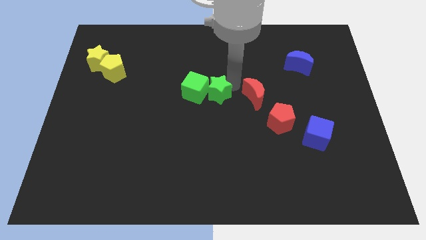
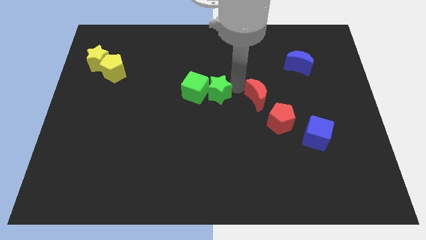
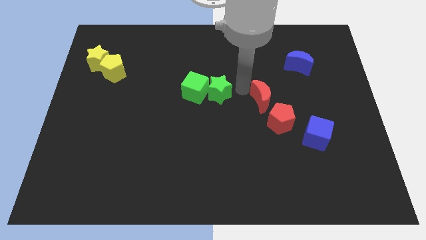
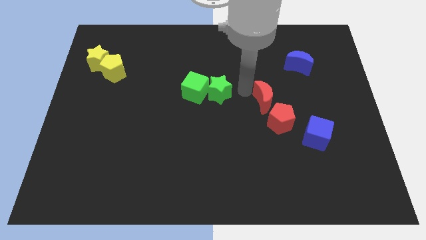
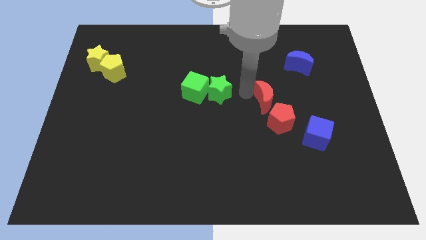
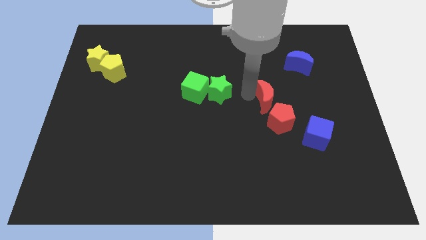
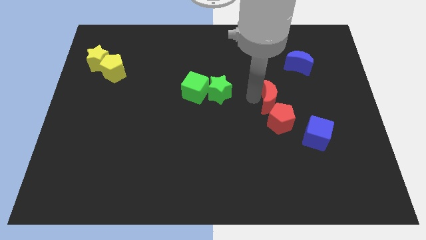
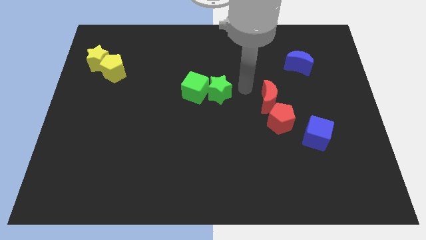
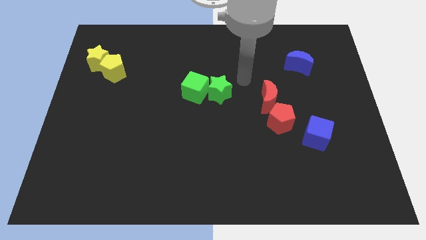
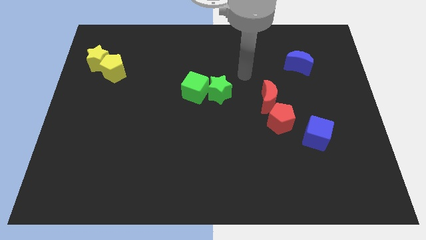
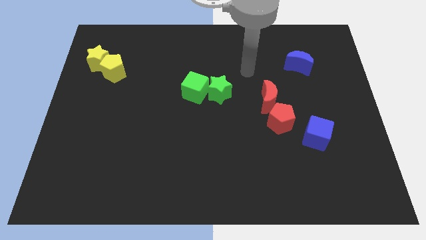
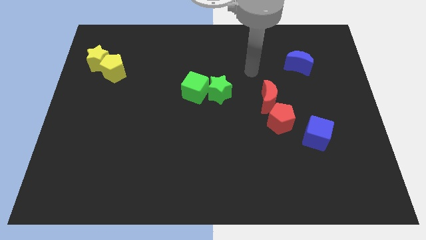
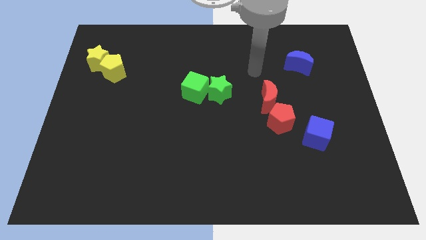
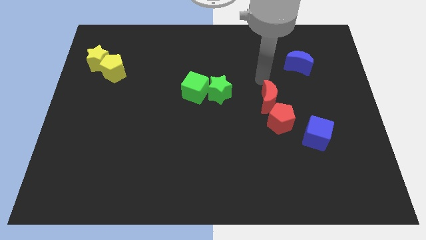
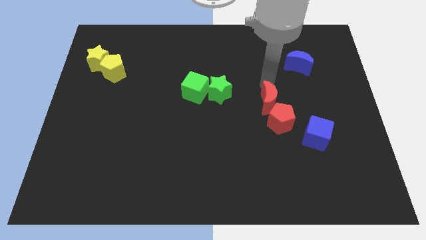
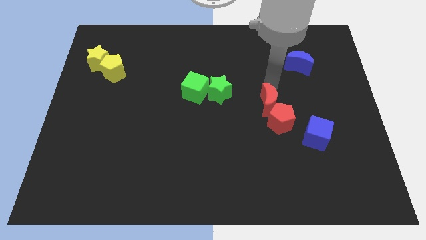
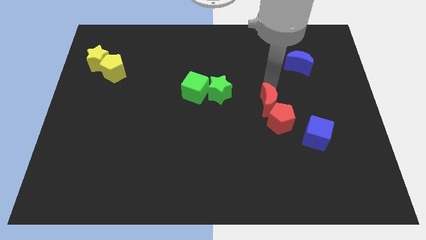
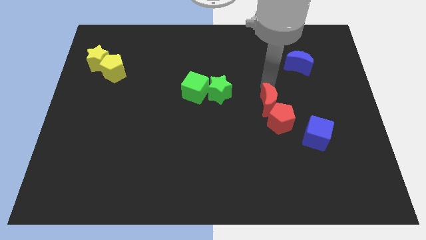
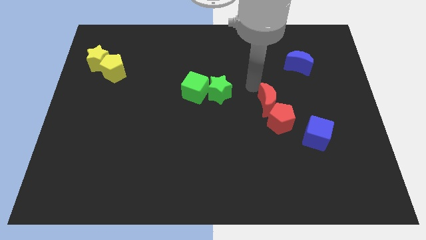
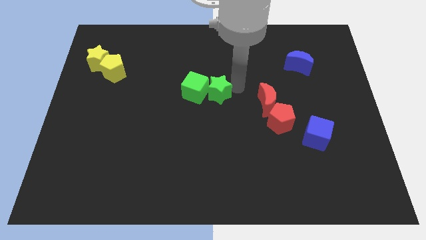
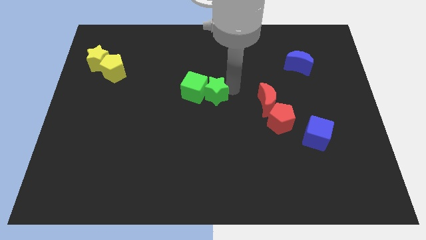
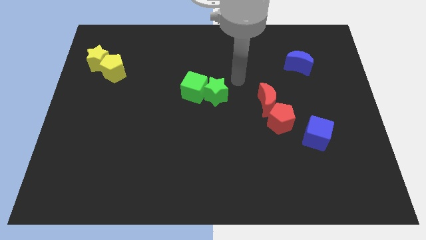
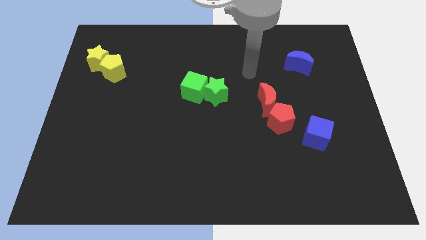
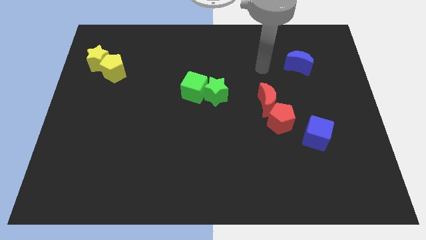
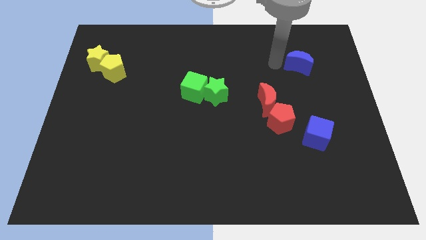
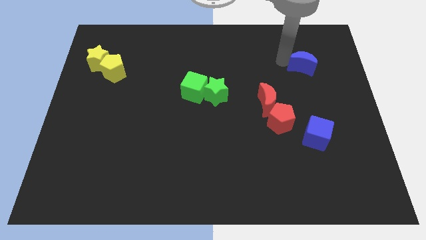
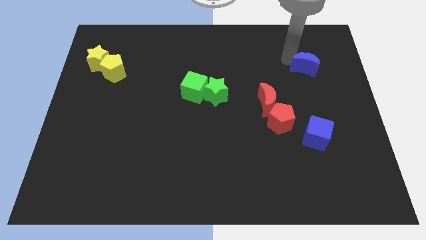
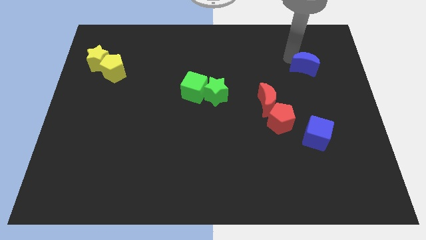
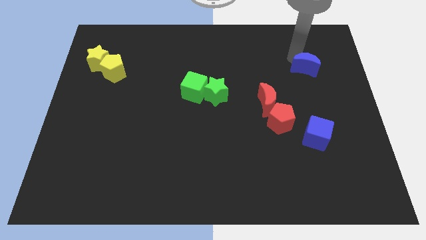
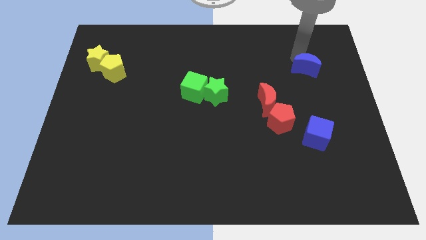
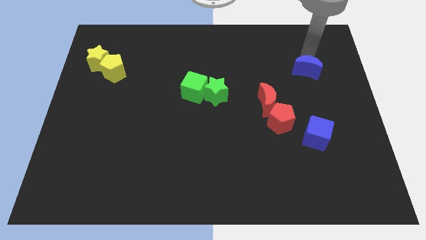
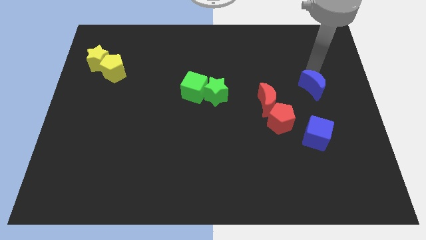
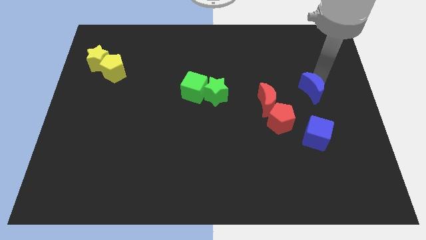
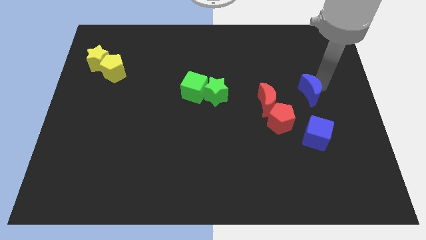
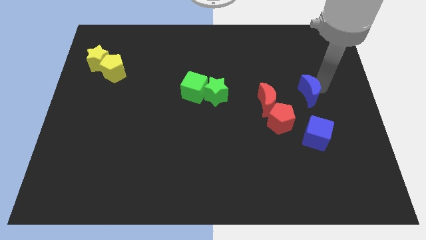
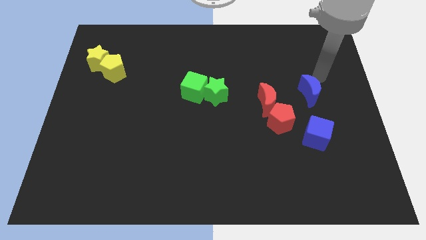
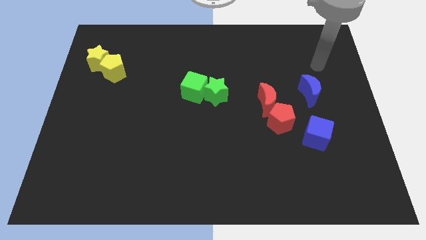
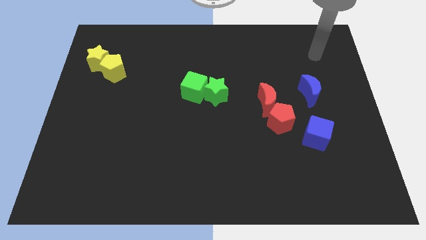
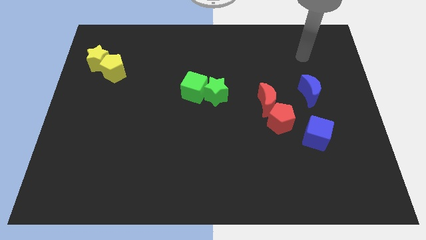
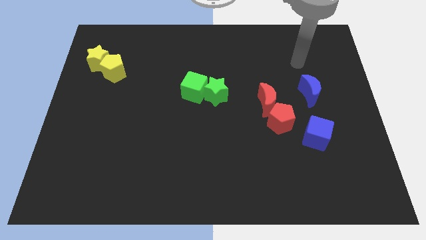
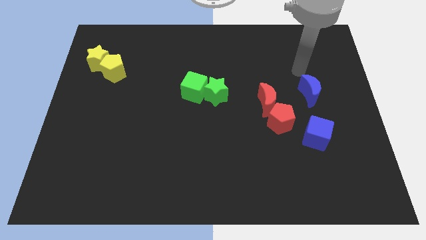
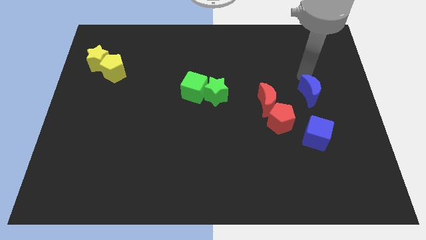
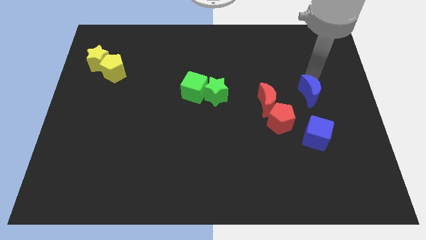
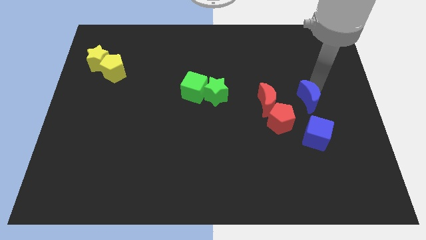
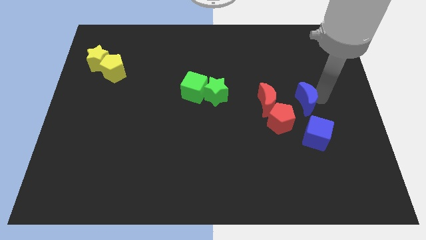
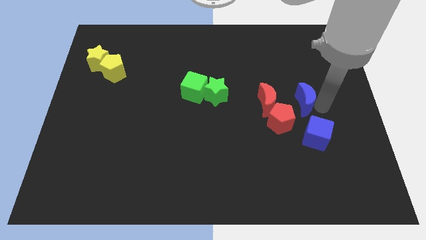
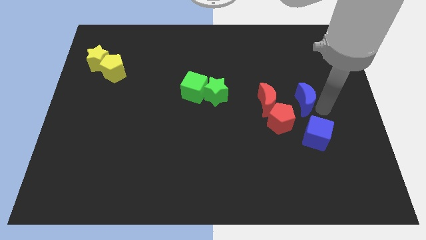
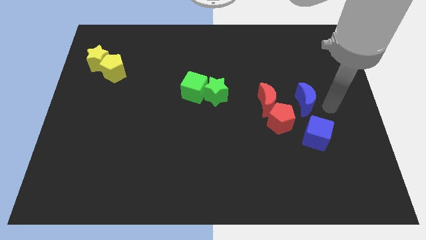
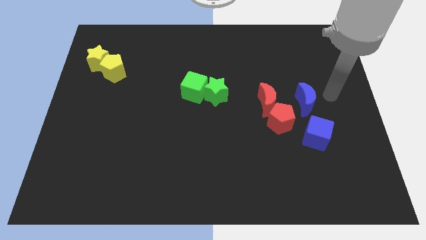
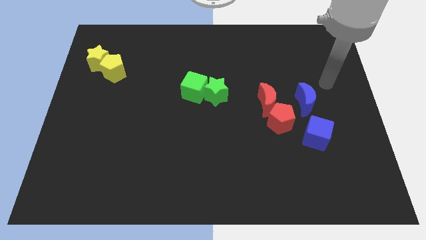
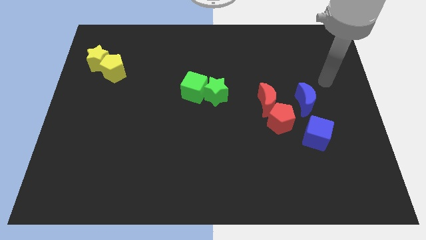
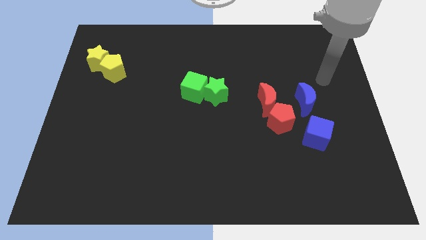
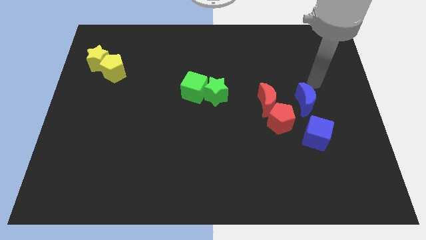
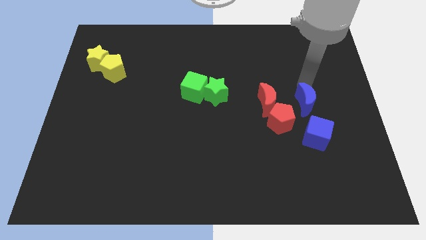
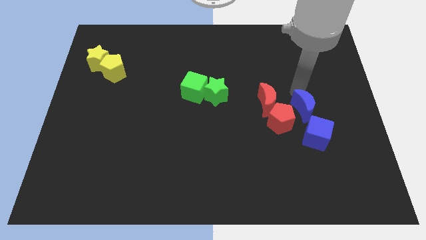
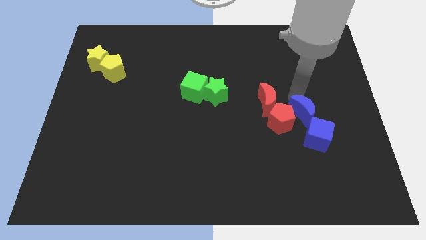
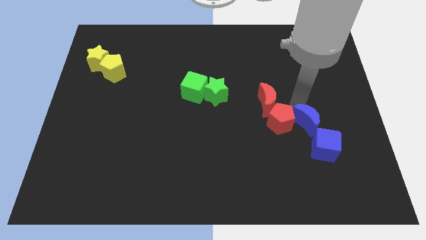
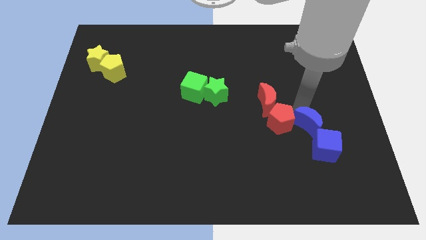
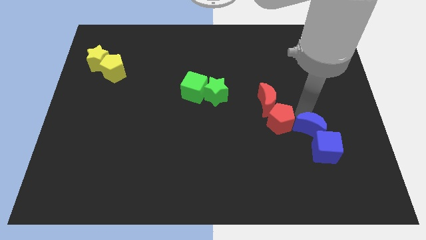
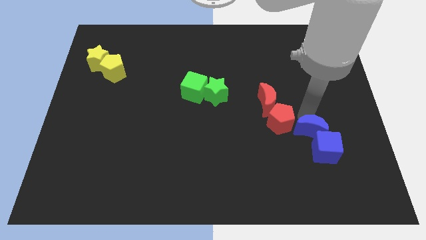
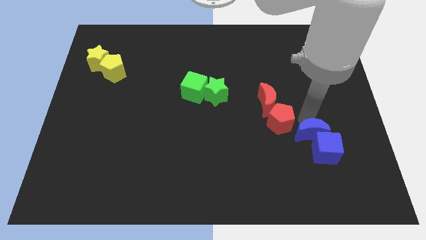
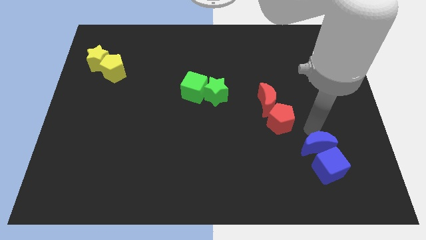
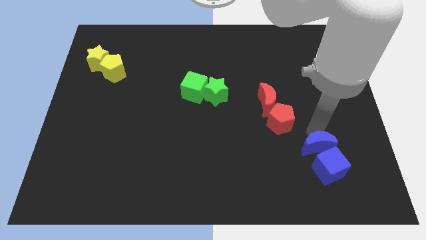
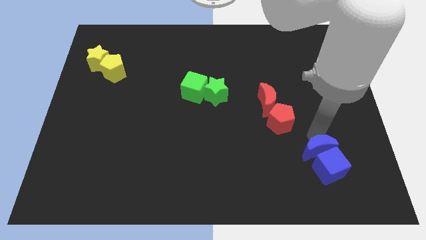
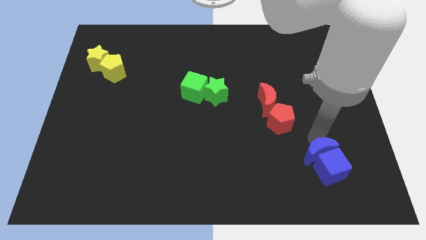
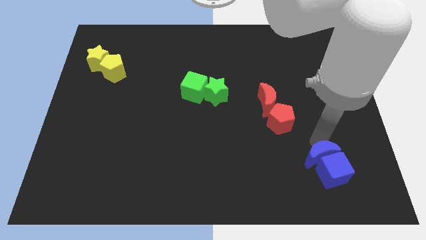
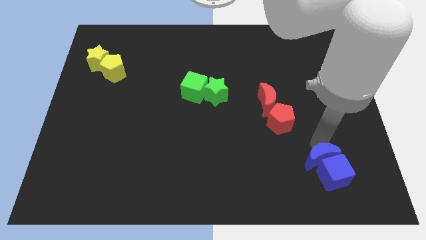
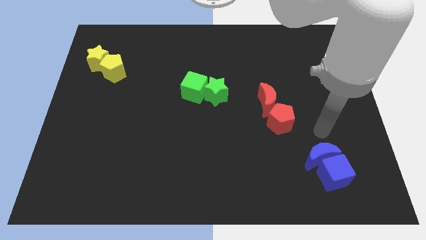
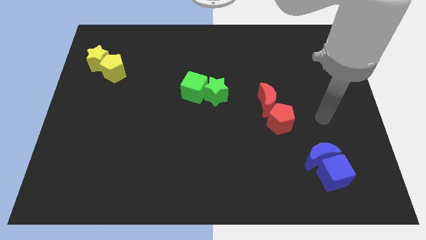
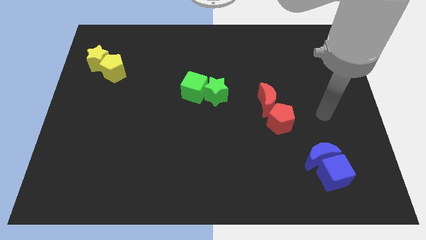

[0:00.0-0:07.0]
push the red moon into red pentagon and blue moon into blue cube

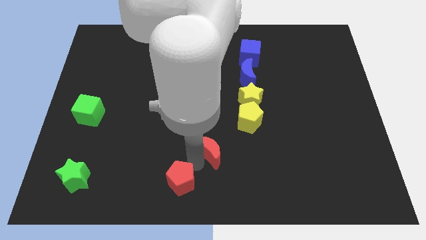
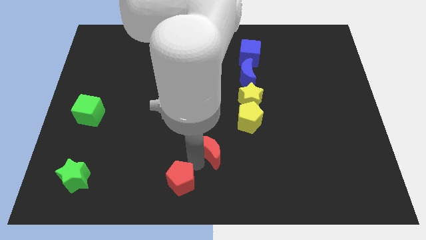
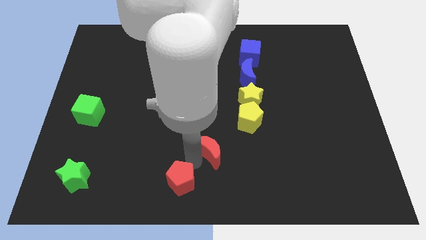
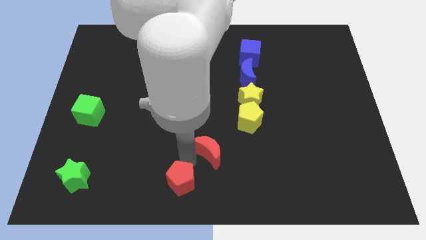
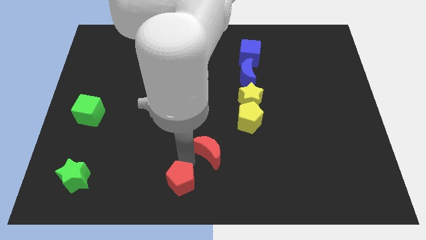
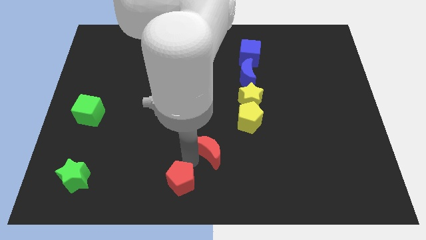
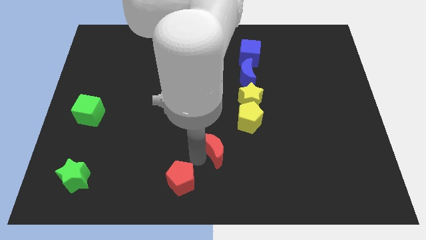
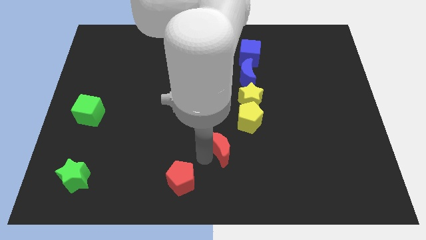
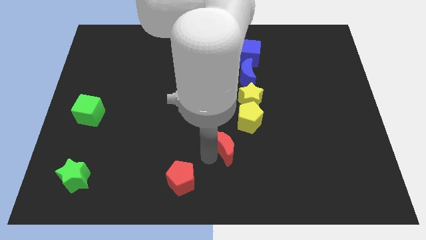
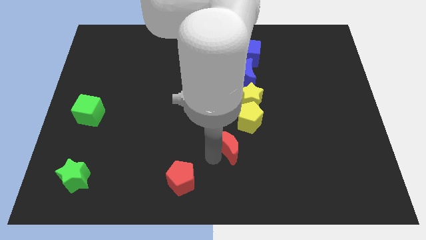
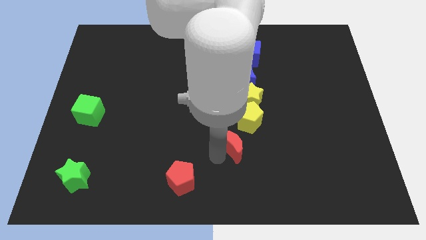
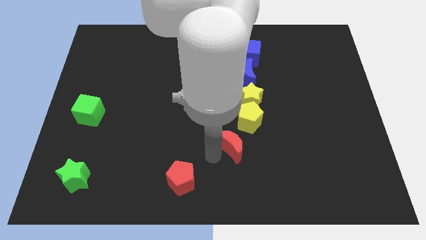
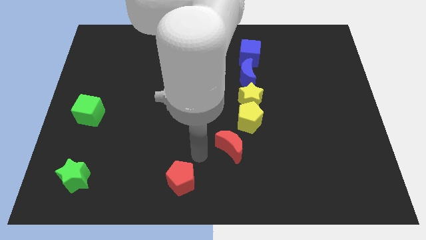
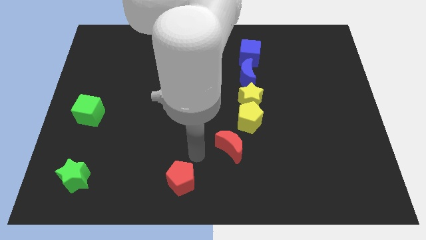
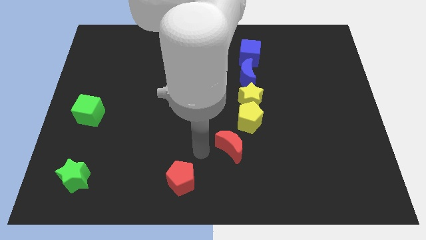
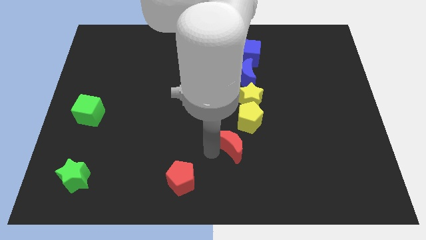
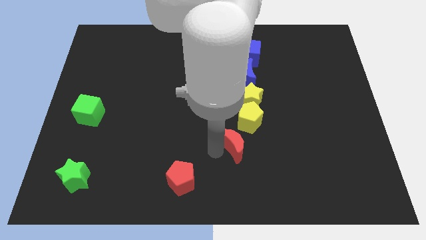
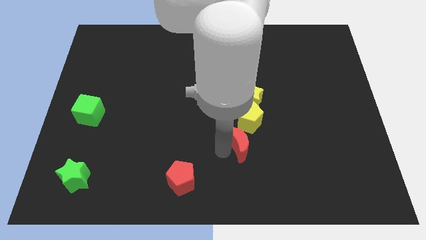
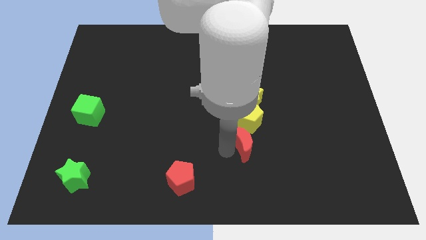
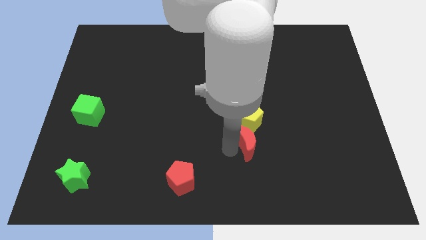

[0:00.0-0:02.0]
move the red moon below yellow pentagon
